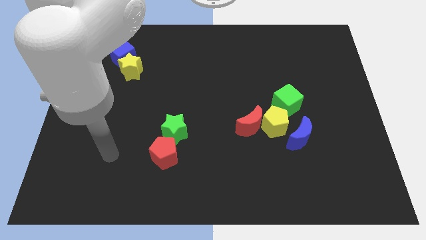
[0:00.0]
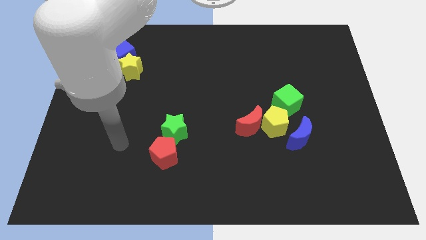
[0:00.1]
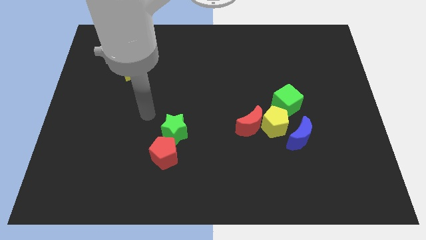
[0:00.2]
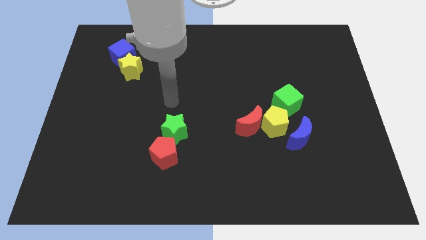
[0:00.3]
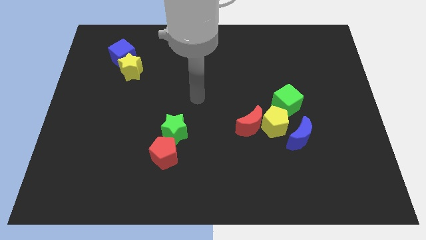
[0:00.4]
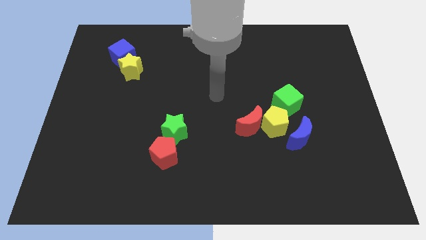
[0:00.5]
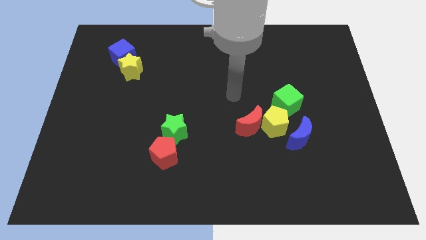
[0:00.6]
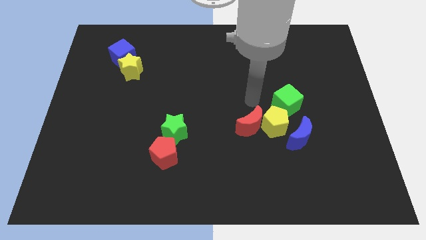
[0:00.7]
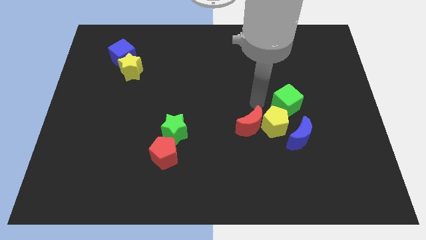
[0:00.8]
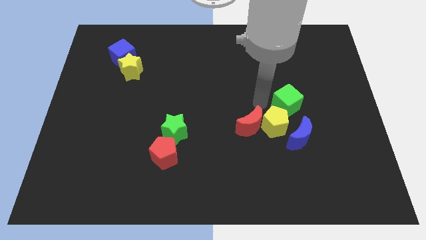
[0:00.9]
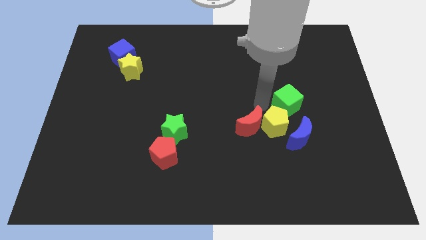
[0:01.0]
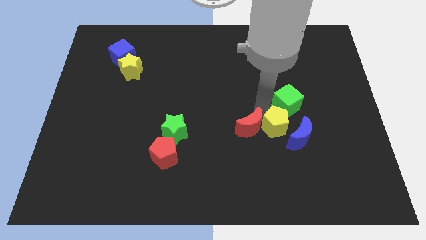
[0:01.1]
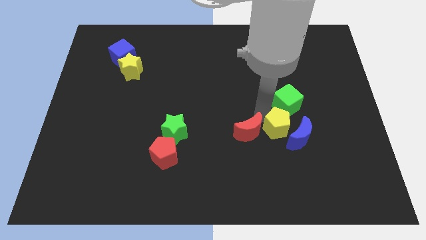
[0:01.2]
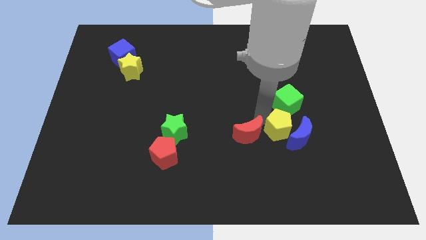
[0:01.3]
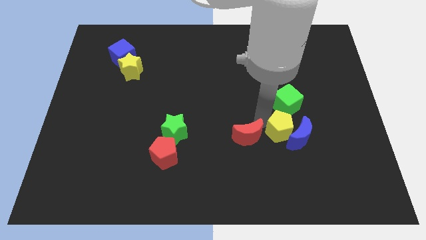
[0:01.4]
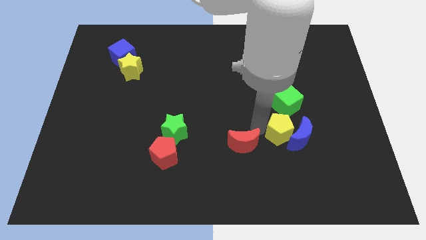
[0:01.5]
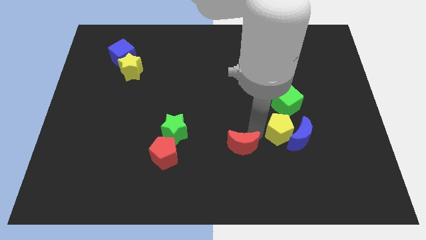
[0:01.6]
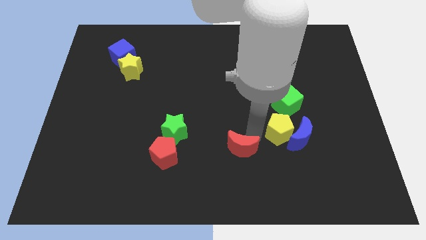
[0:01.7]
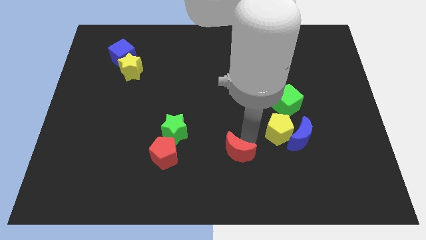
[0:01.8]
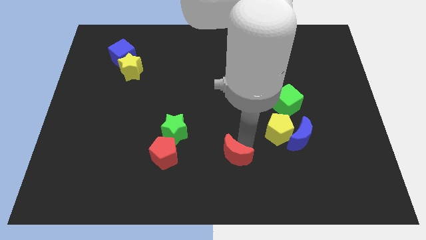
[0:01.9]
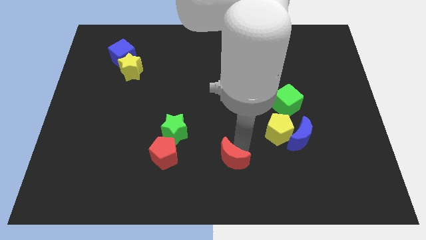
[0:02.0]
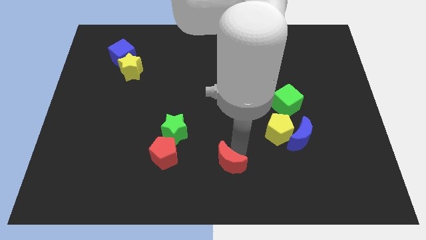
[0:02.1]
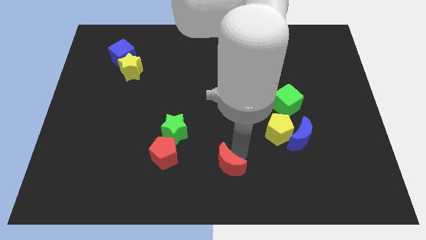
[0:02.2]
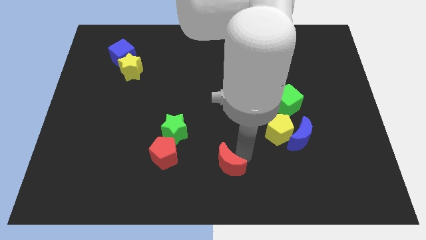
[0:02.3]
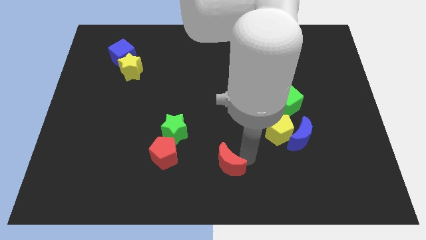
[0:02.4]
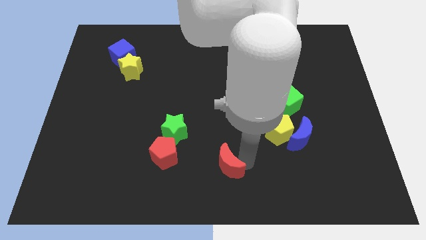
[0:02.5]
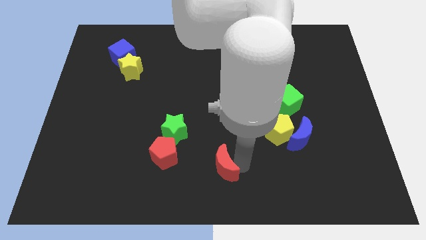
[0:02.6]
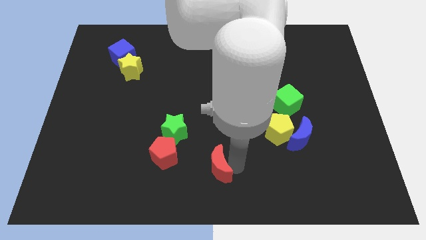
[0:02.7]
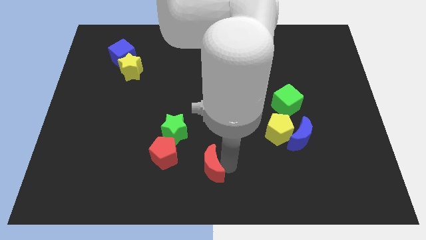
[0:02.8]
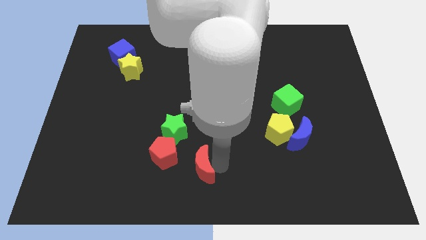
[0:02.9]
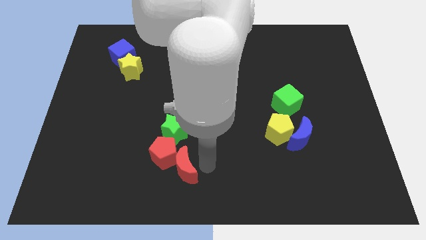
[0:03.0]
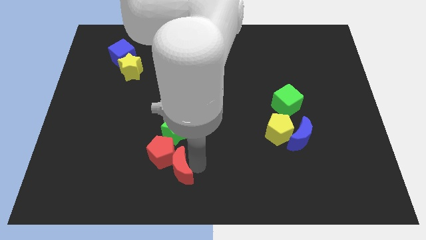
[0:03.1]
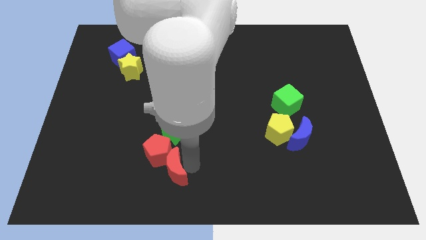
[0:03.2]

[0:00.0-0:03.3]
slide the red moon to the red pentagon

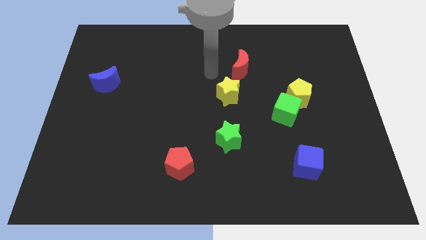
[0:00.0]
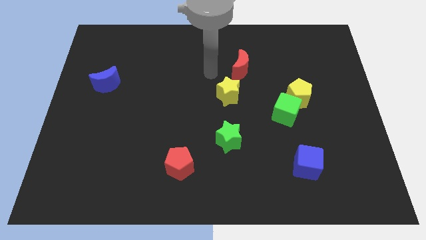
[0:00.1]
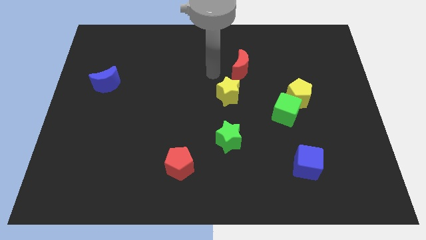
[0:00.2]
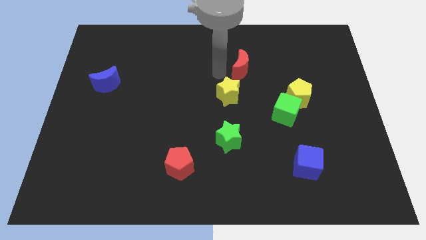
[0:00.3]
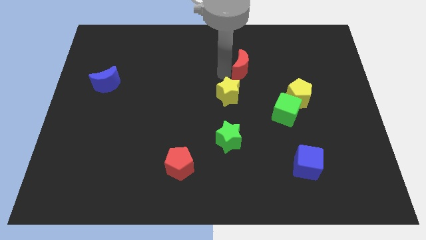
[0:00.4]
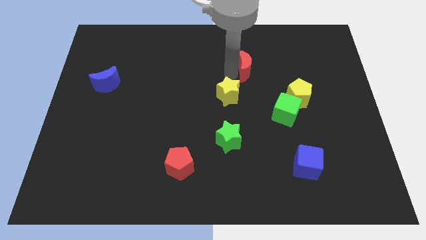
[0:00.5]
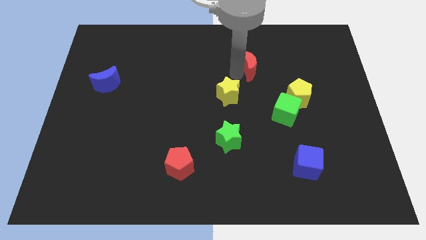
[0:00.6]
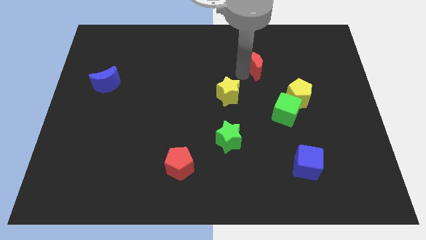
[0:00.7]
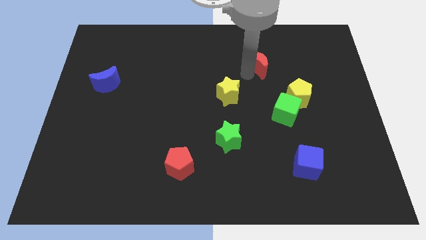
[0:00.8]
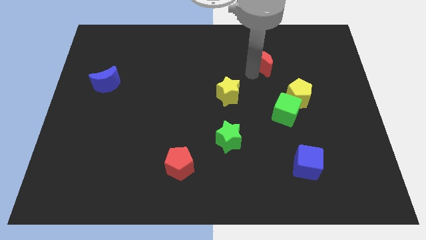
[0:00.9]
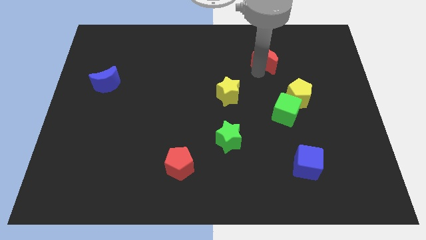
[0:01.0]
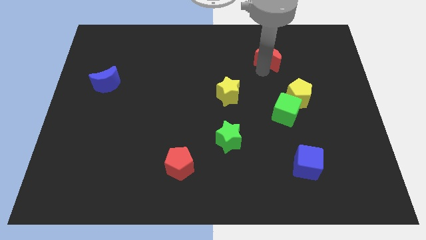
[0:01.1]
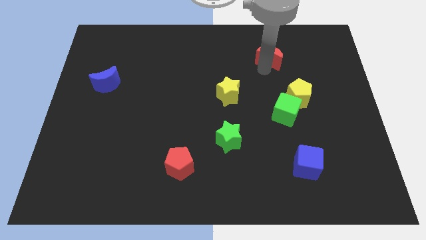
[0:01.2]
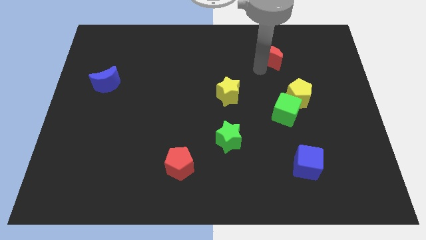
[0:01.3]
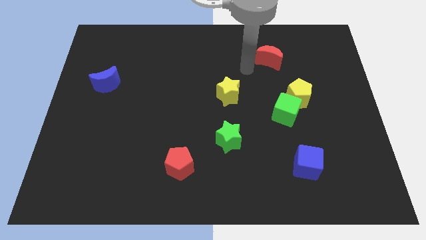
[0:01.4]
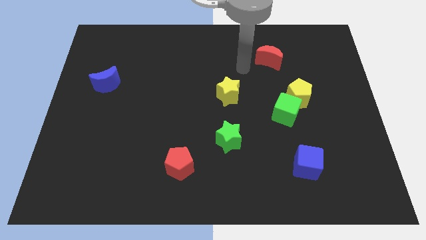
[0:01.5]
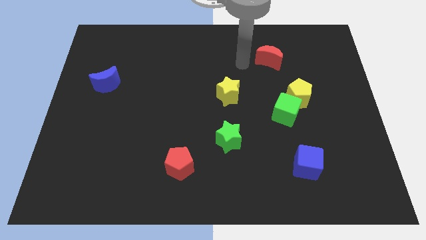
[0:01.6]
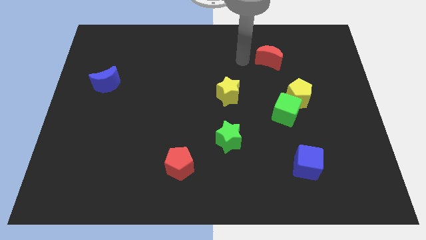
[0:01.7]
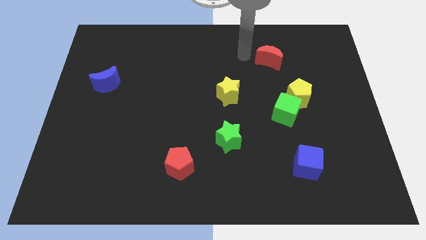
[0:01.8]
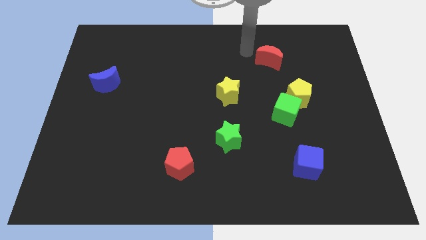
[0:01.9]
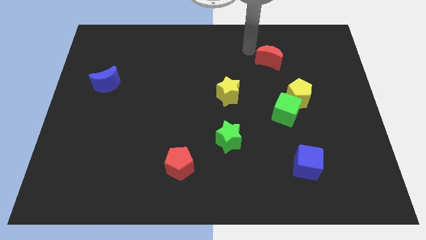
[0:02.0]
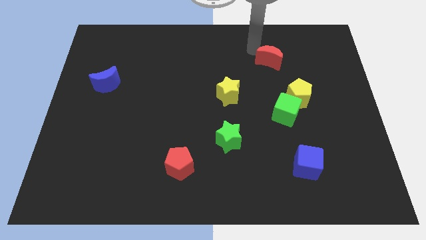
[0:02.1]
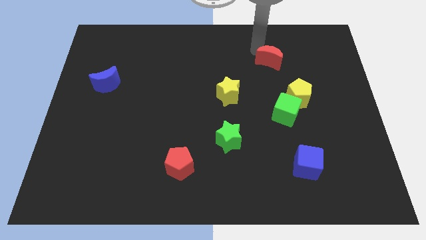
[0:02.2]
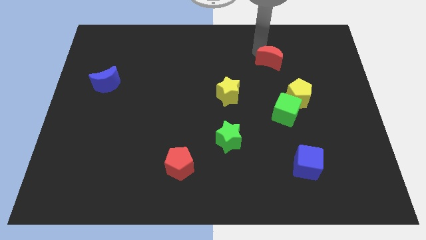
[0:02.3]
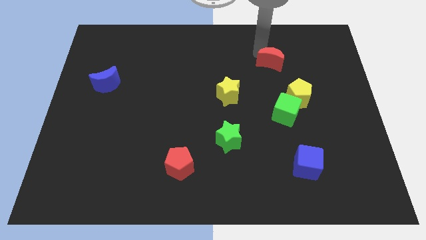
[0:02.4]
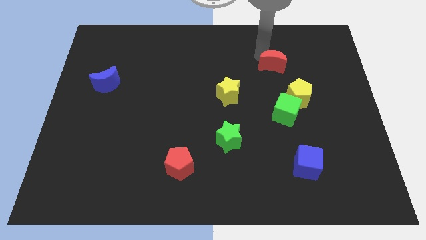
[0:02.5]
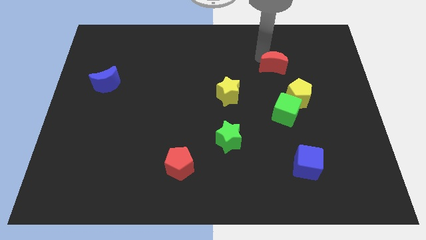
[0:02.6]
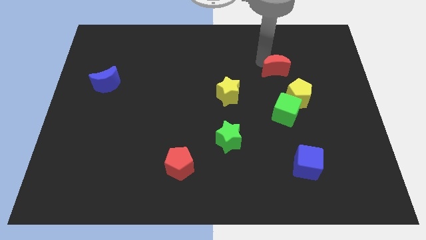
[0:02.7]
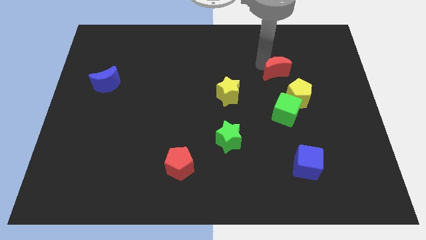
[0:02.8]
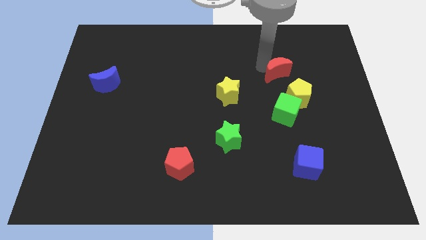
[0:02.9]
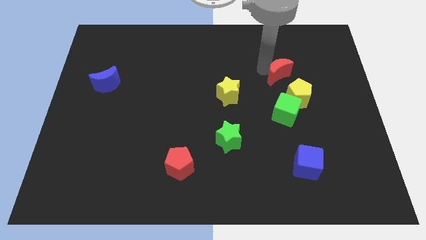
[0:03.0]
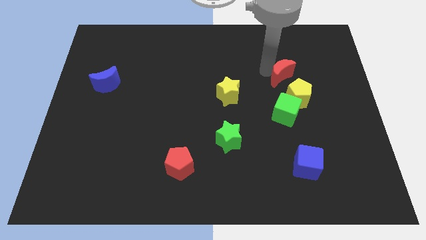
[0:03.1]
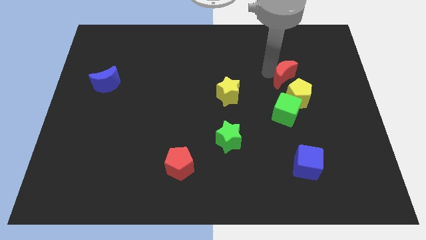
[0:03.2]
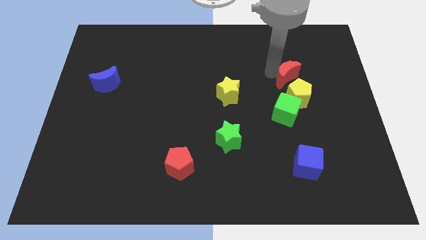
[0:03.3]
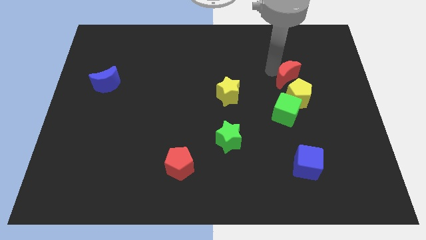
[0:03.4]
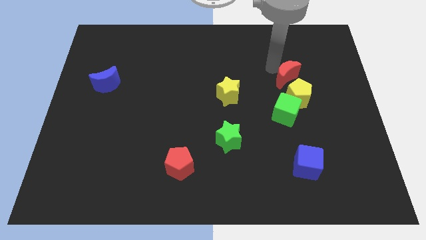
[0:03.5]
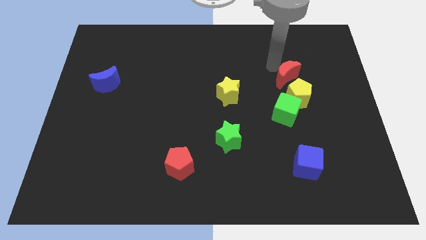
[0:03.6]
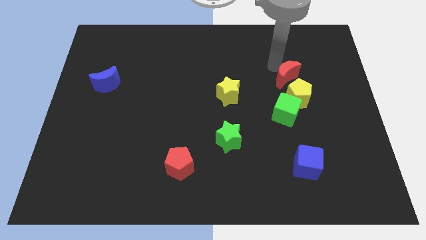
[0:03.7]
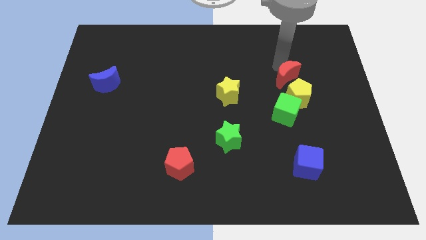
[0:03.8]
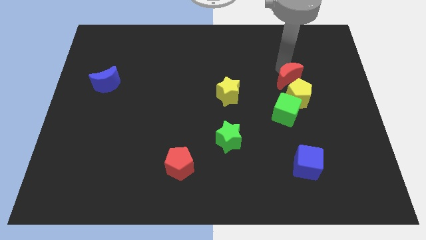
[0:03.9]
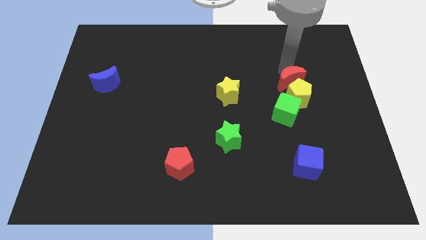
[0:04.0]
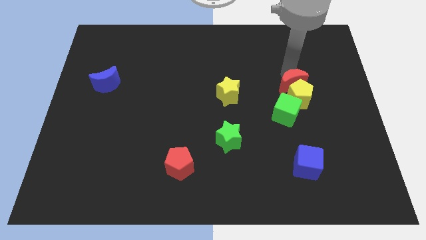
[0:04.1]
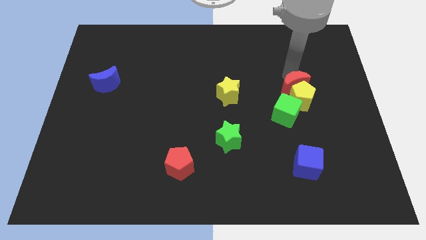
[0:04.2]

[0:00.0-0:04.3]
move the red moon close to the yellow pentagon

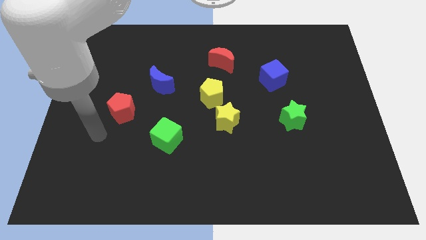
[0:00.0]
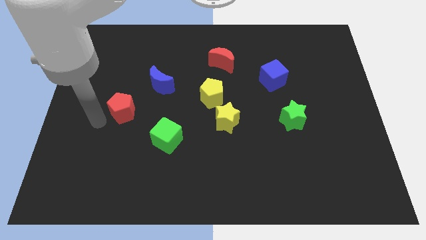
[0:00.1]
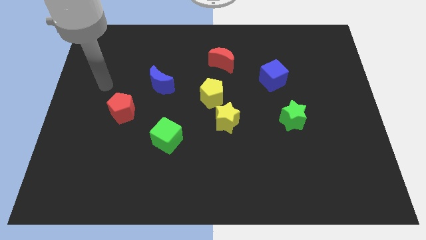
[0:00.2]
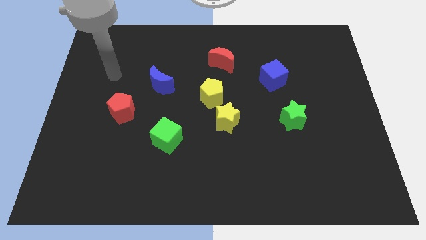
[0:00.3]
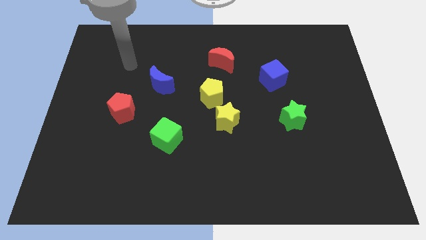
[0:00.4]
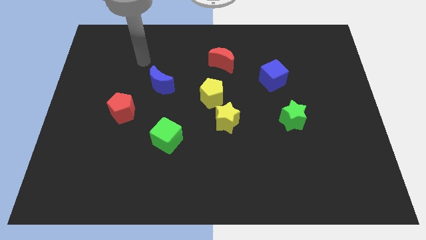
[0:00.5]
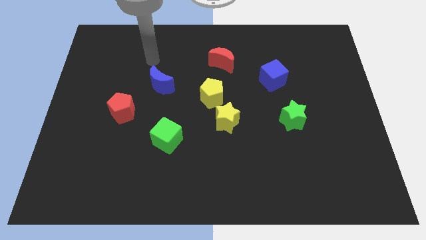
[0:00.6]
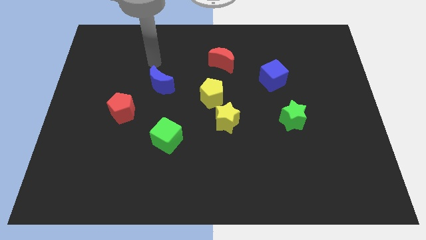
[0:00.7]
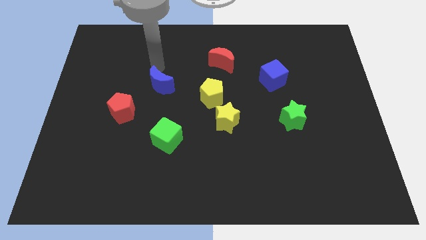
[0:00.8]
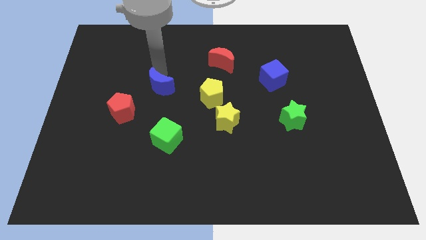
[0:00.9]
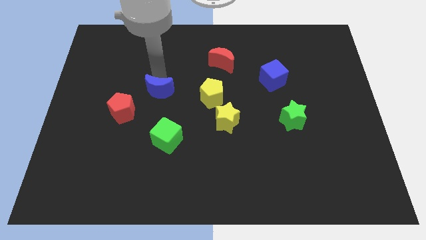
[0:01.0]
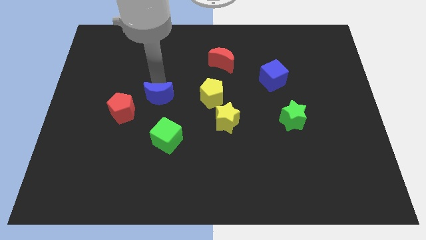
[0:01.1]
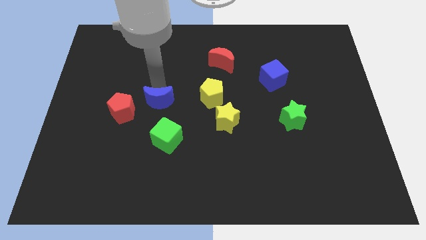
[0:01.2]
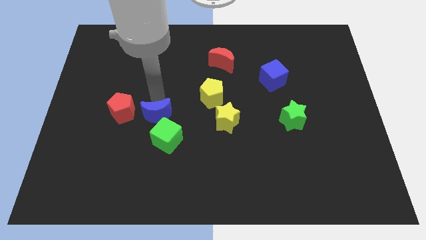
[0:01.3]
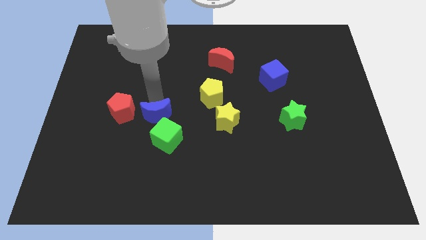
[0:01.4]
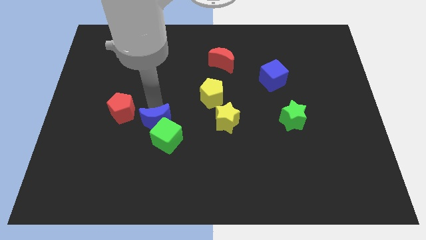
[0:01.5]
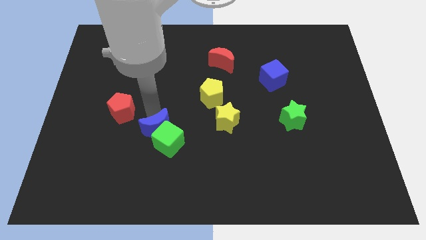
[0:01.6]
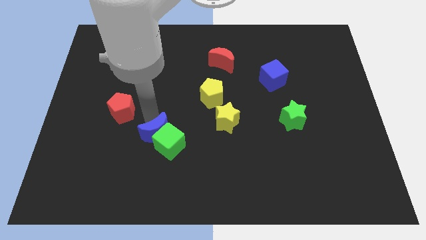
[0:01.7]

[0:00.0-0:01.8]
move the blue moon close to the green cube
